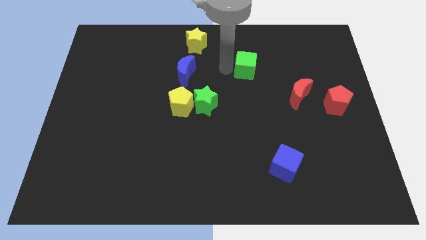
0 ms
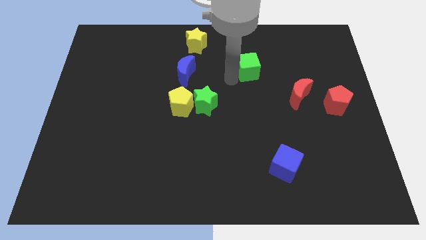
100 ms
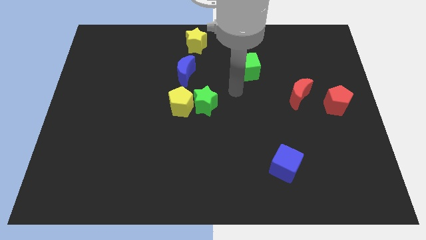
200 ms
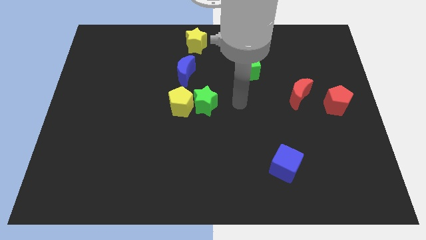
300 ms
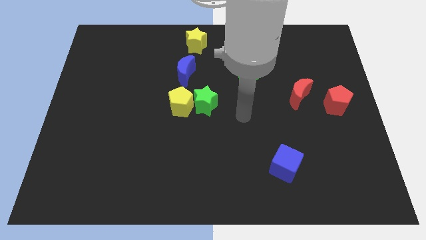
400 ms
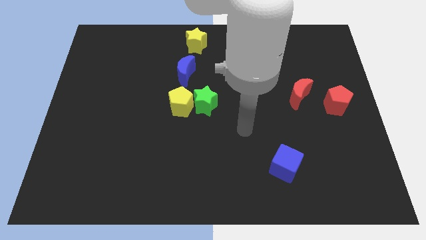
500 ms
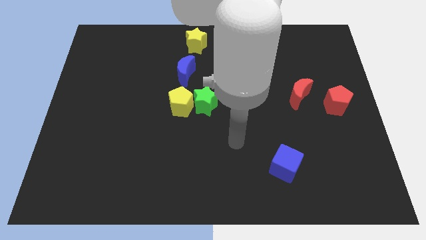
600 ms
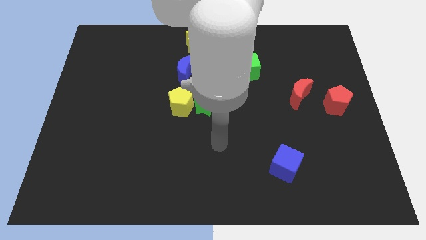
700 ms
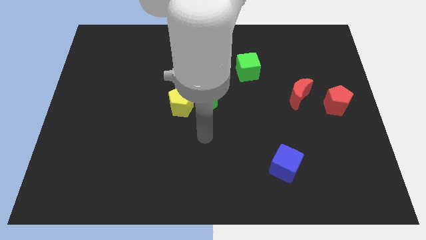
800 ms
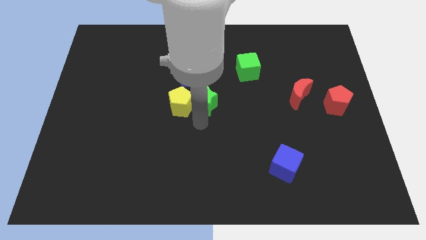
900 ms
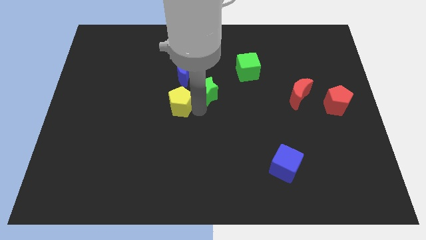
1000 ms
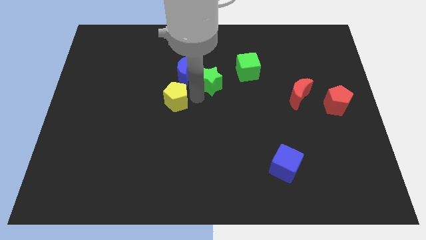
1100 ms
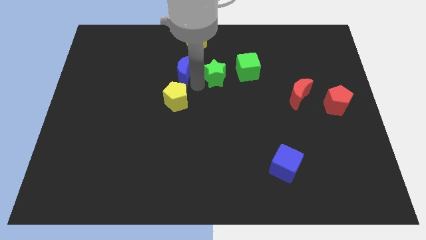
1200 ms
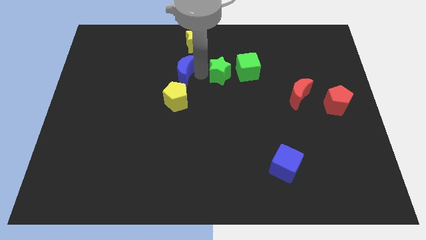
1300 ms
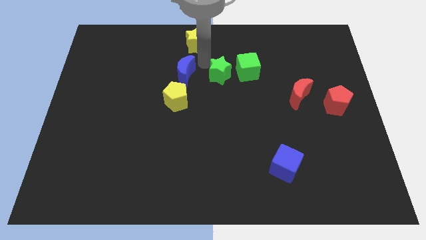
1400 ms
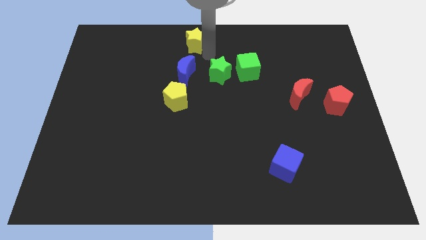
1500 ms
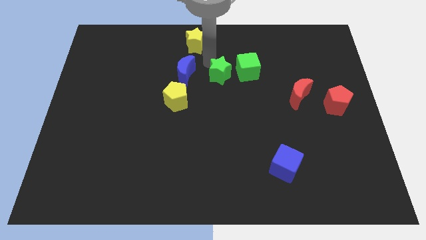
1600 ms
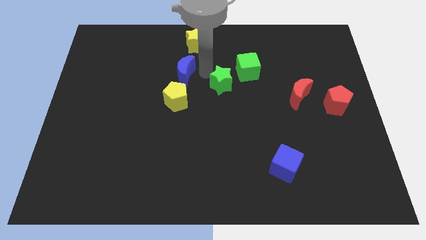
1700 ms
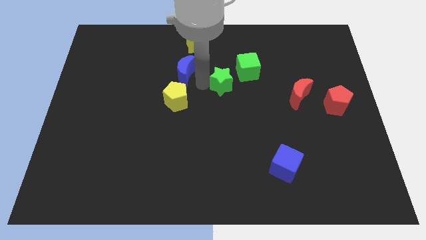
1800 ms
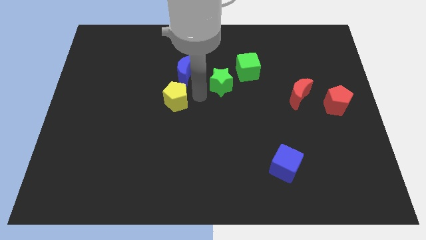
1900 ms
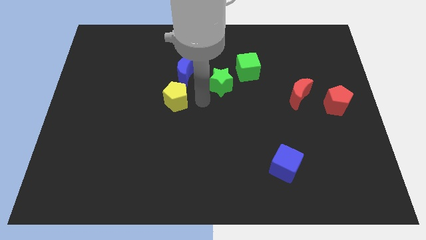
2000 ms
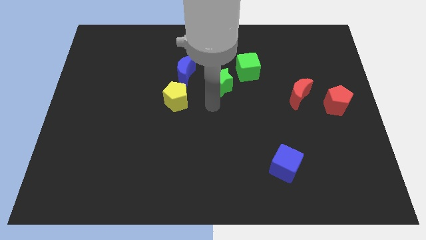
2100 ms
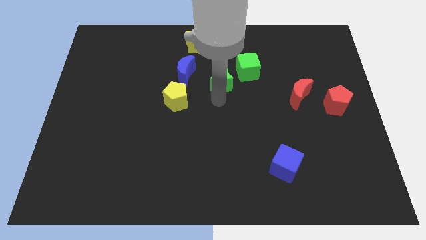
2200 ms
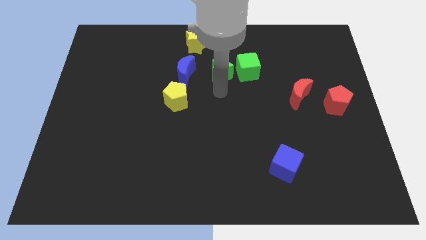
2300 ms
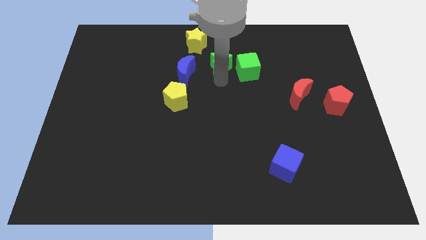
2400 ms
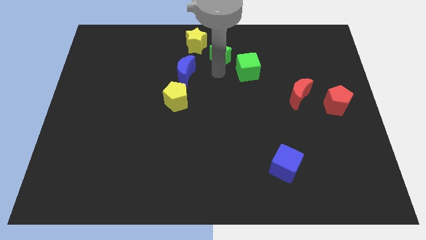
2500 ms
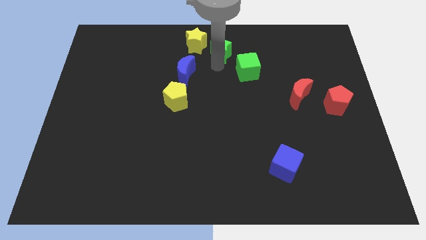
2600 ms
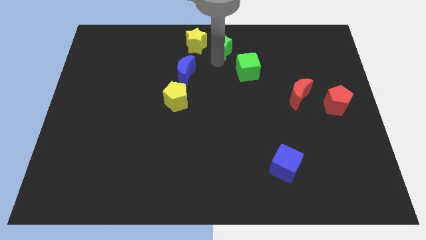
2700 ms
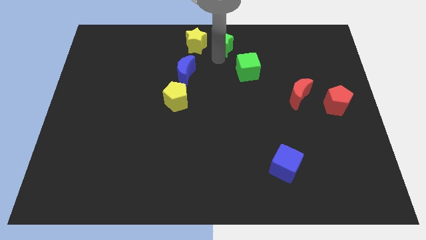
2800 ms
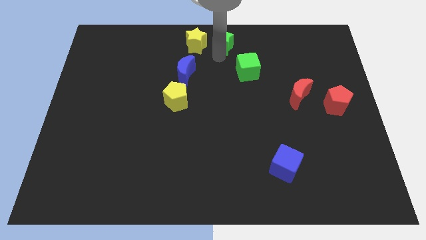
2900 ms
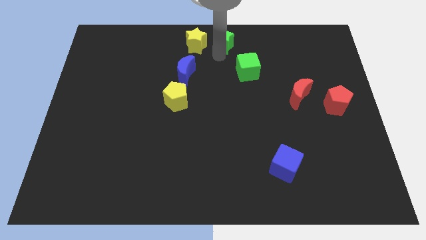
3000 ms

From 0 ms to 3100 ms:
move the green star to the right of the yellow star

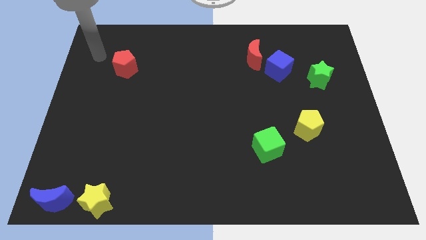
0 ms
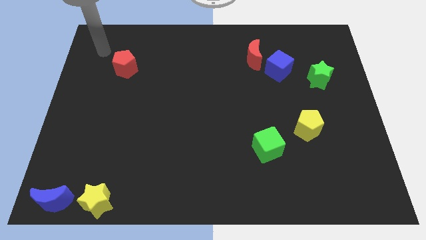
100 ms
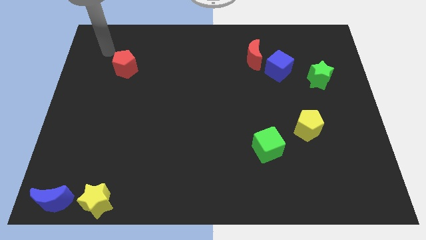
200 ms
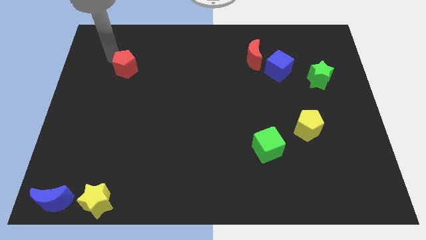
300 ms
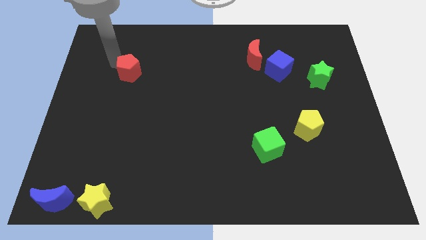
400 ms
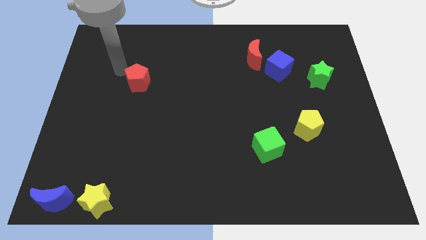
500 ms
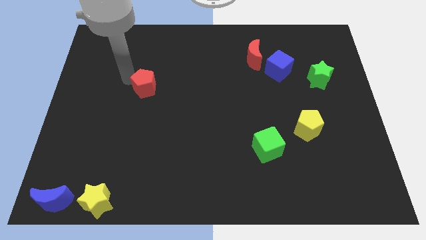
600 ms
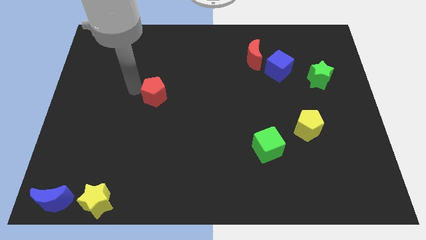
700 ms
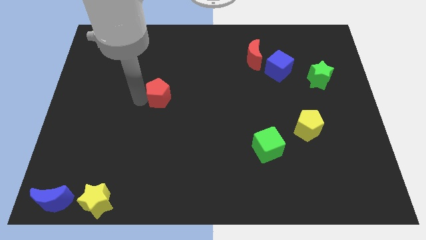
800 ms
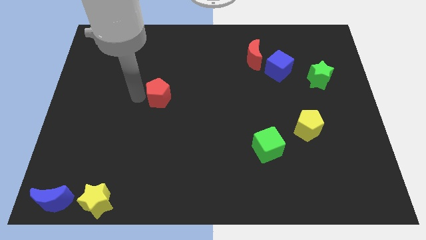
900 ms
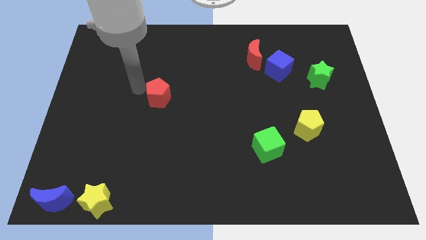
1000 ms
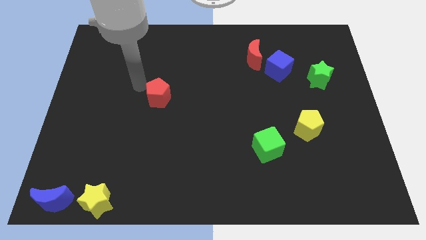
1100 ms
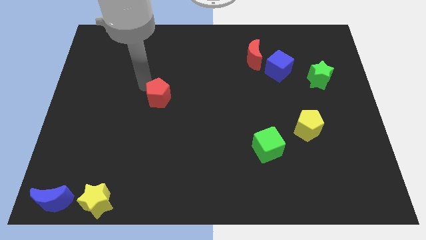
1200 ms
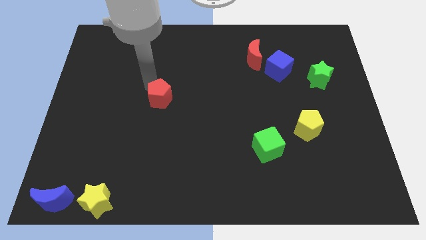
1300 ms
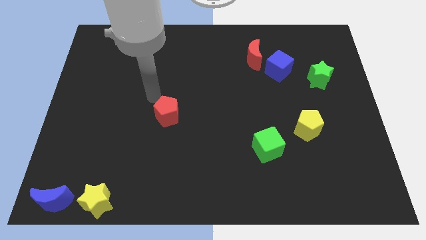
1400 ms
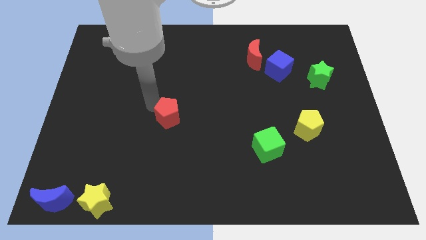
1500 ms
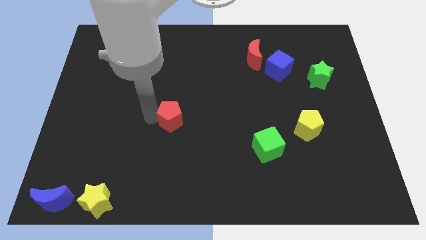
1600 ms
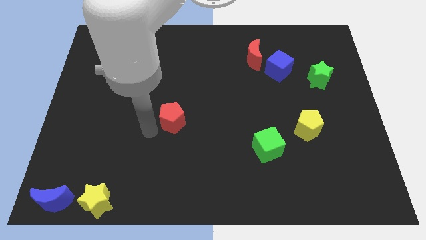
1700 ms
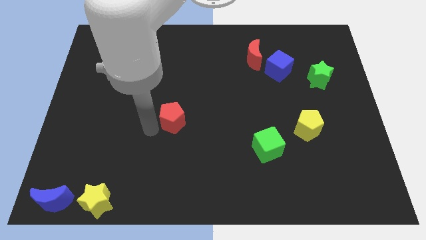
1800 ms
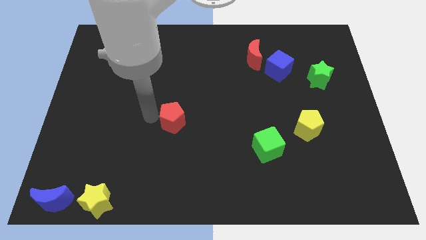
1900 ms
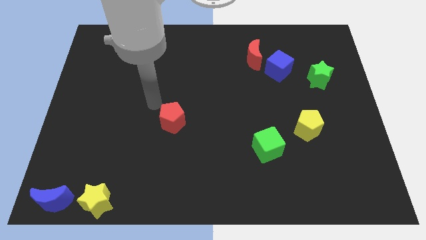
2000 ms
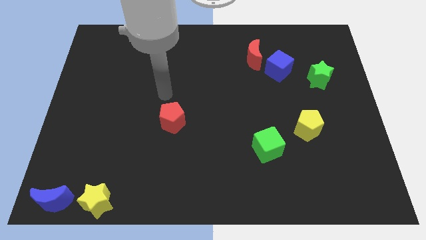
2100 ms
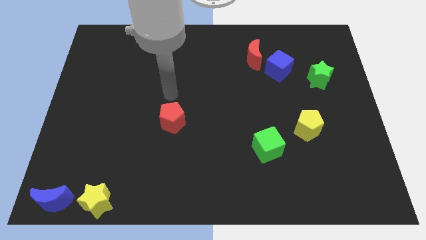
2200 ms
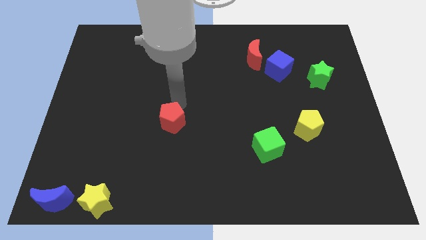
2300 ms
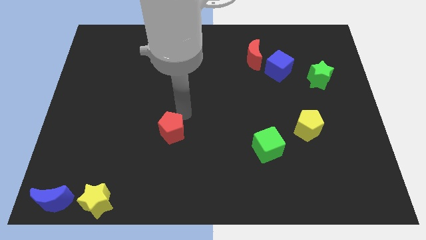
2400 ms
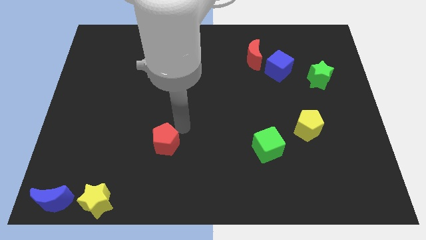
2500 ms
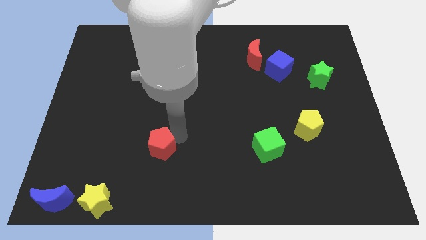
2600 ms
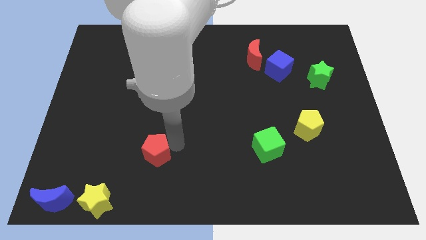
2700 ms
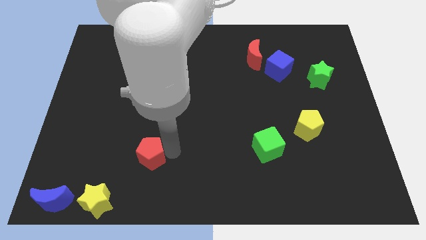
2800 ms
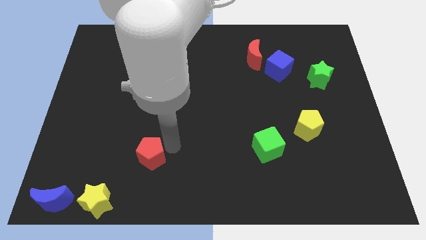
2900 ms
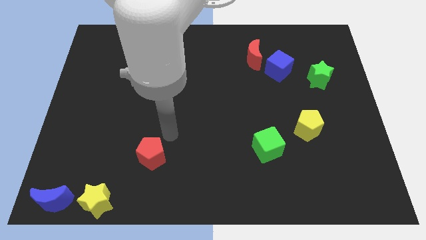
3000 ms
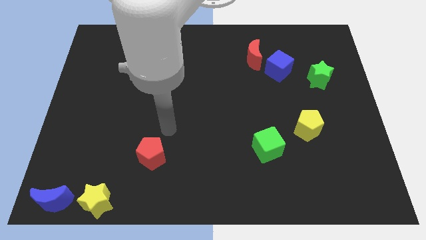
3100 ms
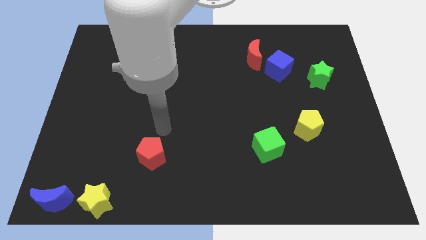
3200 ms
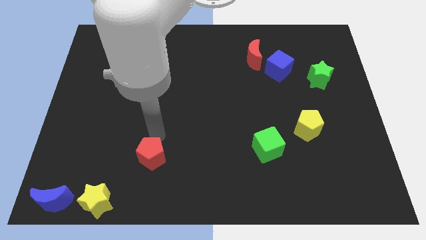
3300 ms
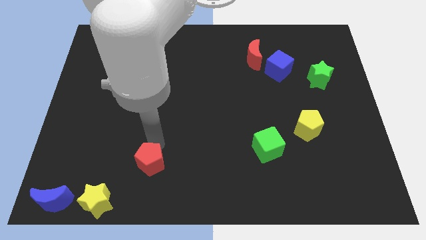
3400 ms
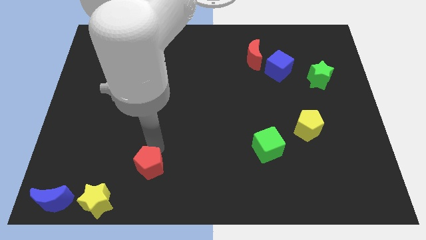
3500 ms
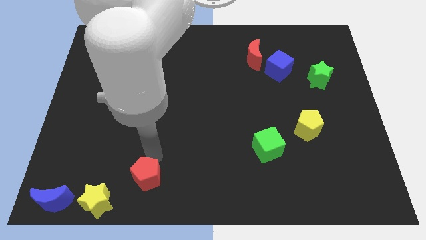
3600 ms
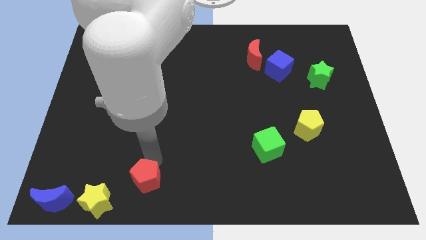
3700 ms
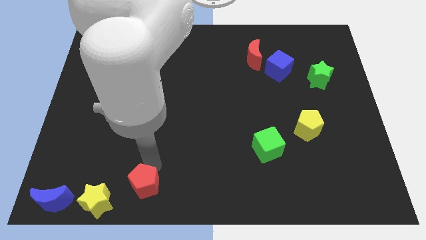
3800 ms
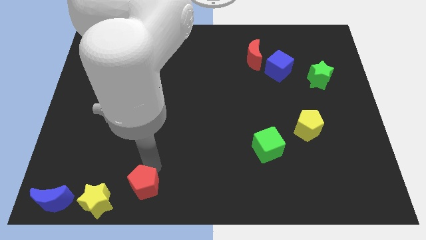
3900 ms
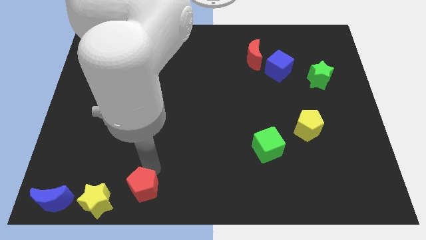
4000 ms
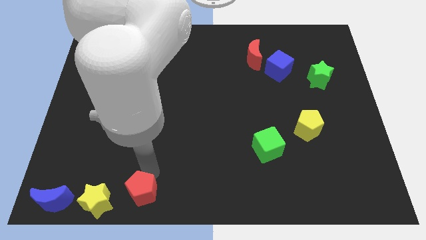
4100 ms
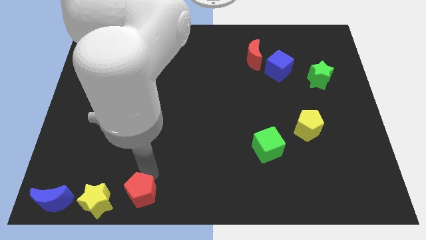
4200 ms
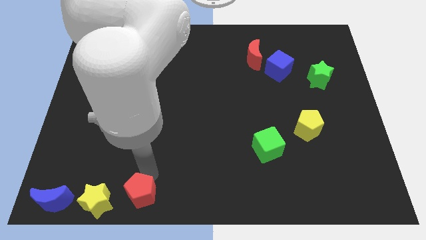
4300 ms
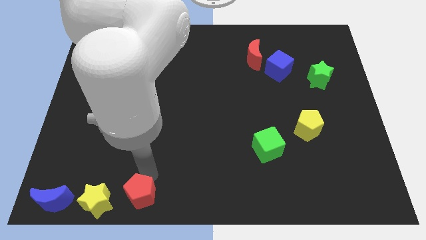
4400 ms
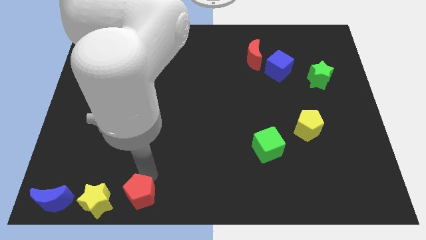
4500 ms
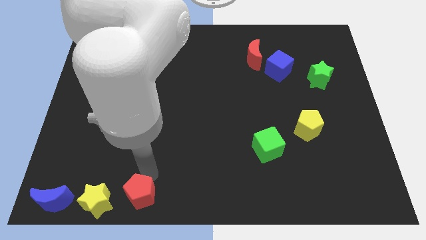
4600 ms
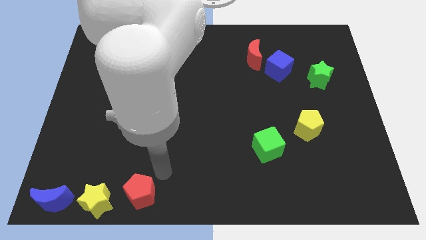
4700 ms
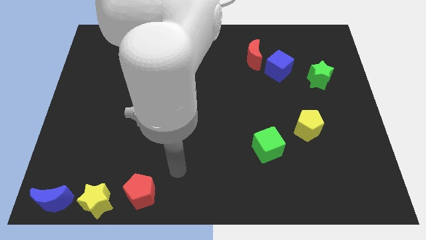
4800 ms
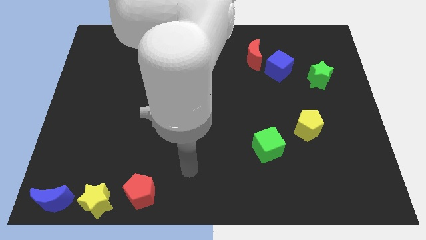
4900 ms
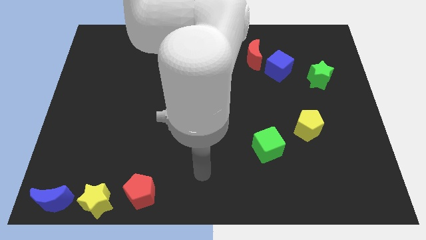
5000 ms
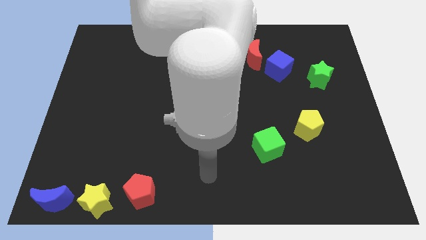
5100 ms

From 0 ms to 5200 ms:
put the red pentagon on the right side of the yellow star

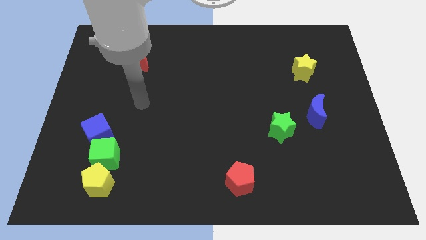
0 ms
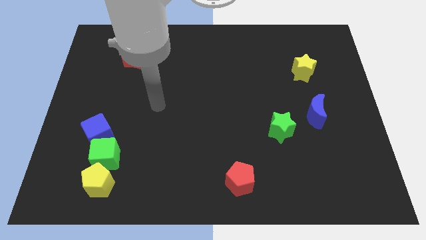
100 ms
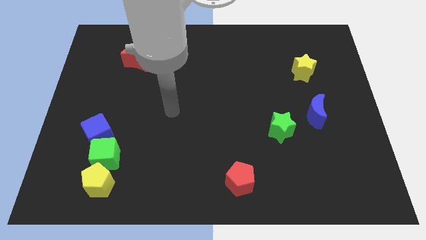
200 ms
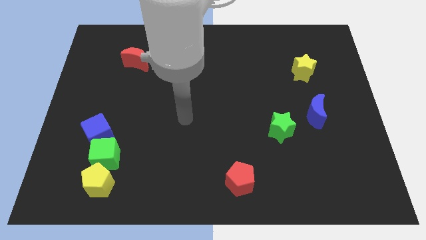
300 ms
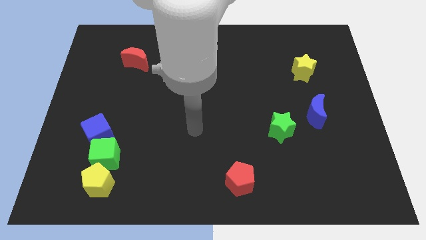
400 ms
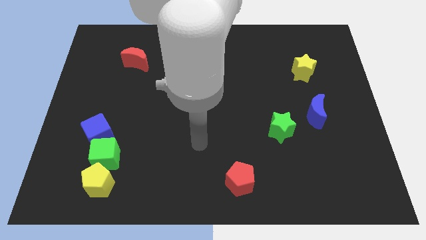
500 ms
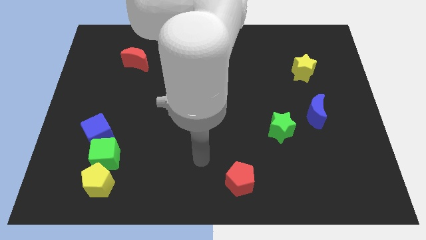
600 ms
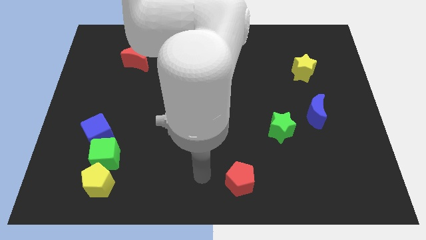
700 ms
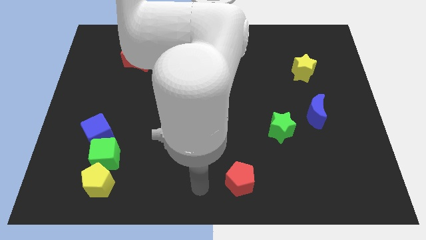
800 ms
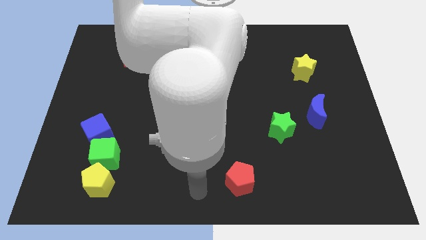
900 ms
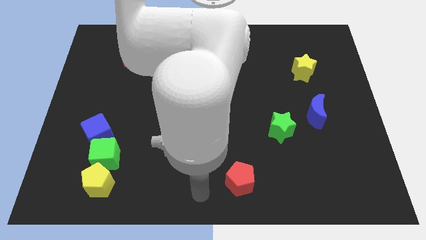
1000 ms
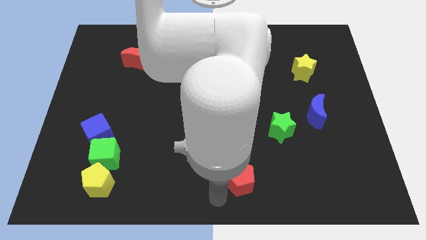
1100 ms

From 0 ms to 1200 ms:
point your arm at the bottom left side of the red pentagon
